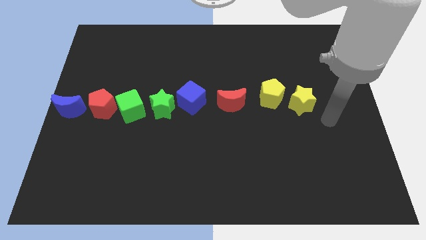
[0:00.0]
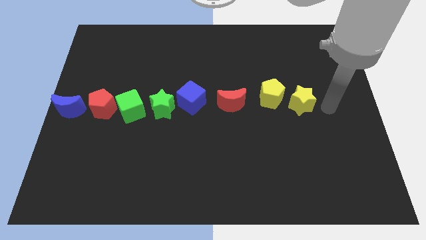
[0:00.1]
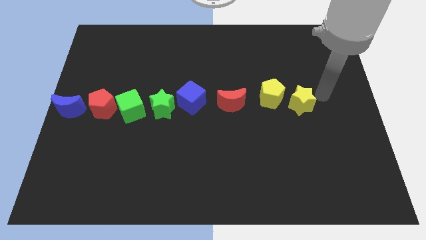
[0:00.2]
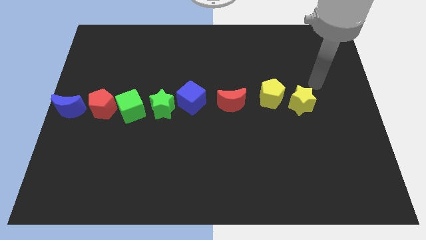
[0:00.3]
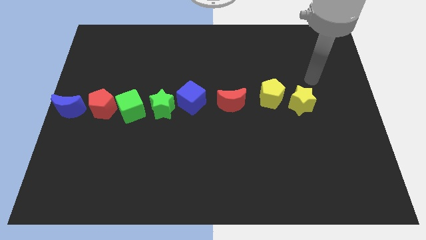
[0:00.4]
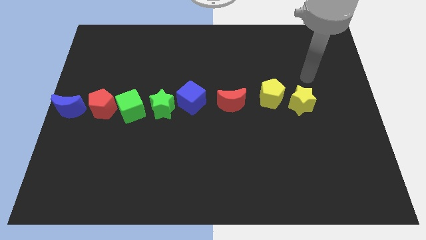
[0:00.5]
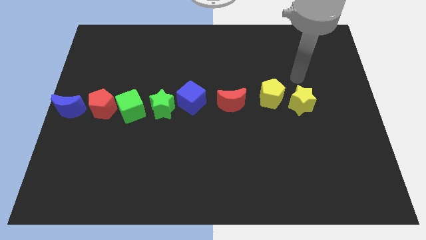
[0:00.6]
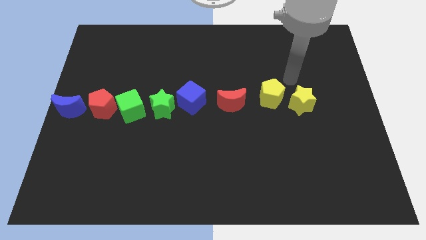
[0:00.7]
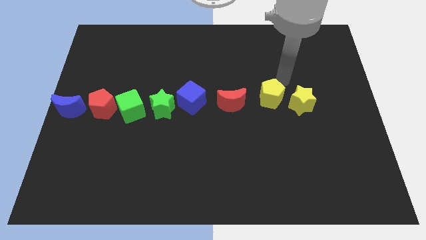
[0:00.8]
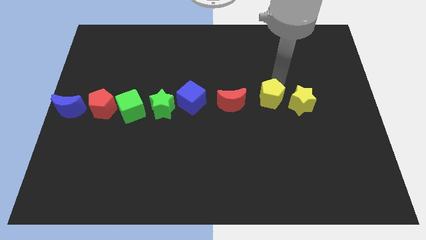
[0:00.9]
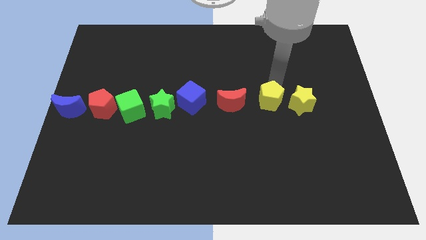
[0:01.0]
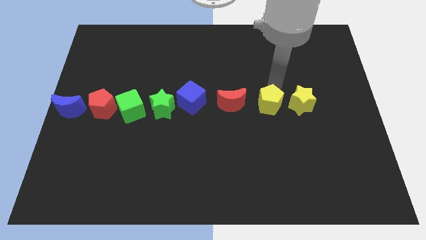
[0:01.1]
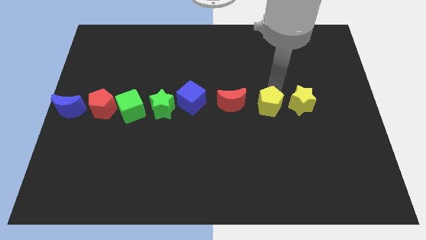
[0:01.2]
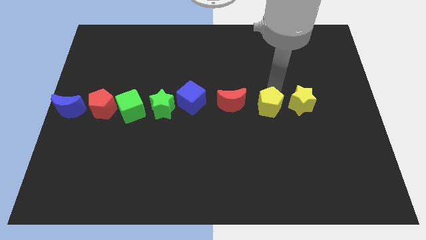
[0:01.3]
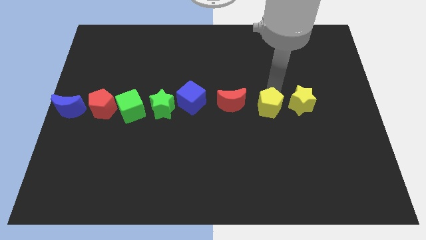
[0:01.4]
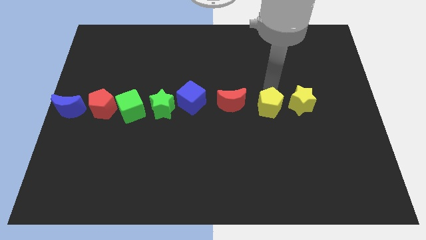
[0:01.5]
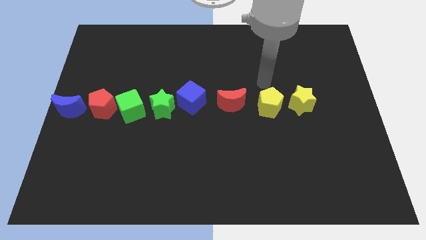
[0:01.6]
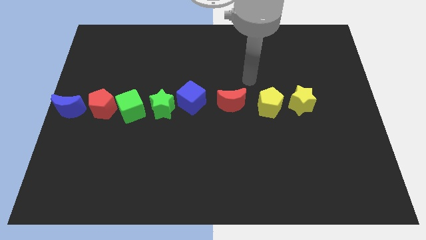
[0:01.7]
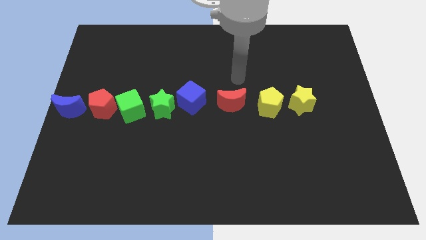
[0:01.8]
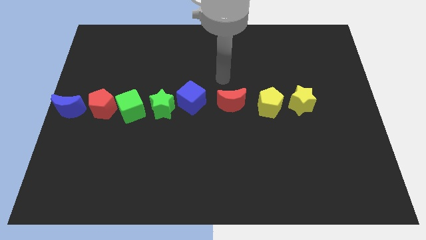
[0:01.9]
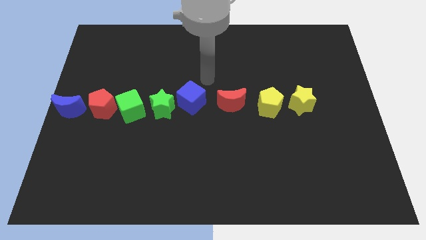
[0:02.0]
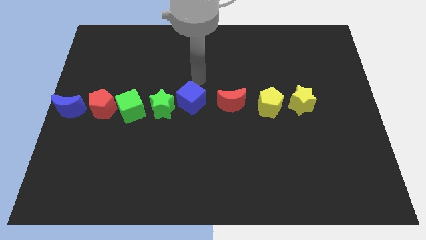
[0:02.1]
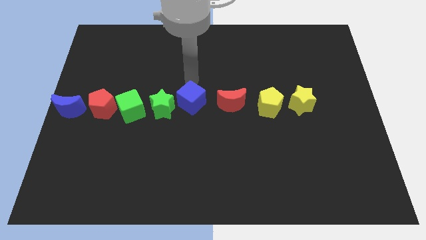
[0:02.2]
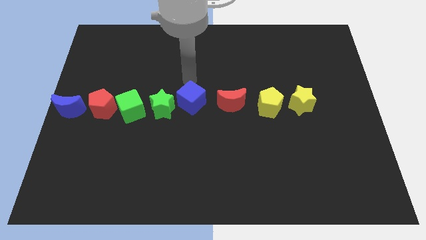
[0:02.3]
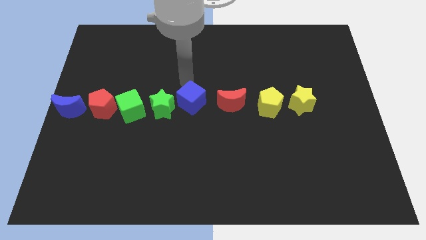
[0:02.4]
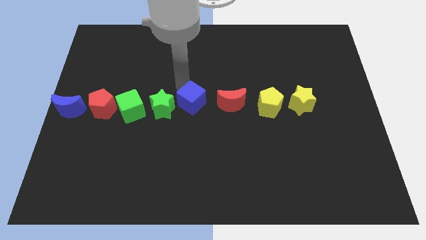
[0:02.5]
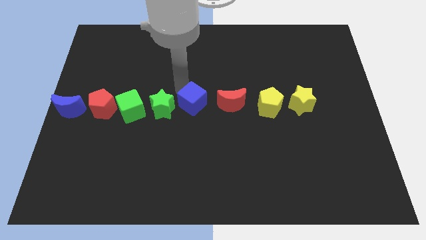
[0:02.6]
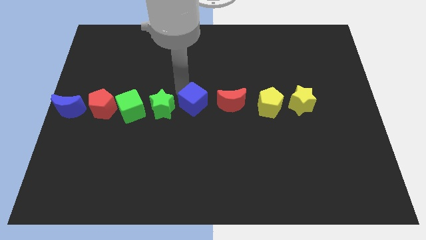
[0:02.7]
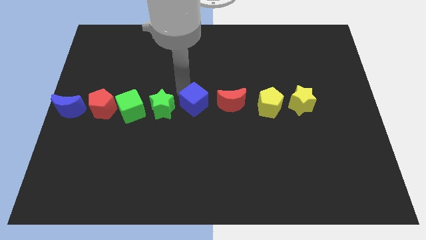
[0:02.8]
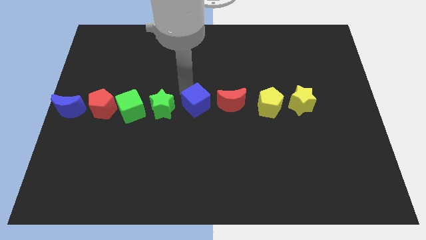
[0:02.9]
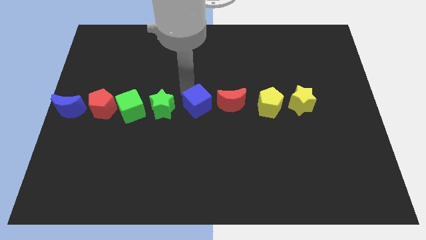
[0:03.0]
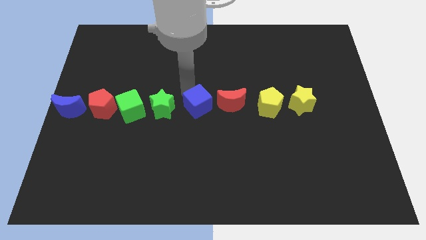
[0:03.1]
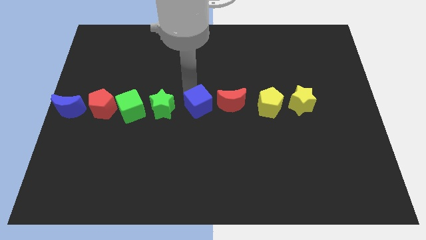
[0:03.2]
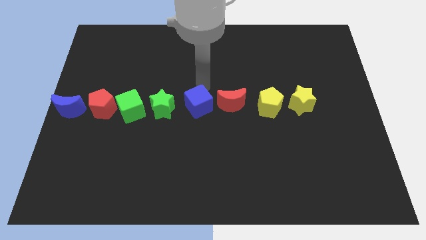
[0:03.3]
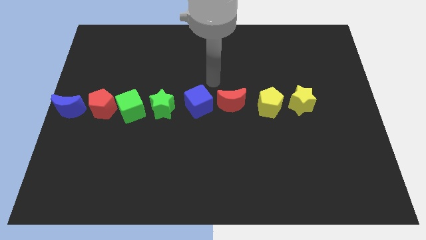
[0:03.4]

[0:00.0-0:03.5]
move the yellow pentagon and the blue cube slightly to bottom

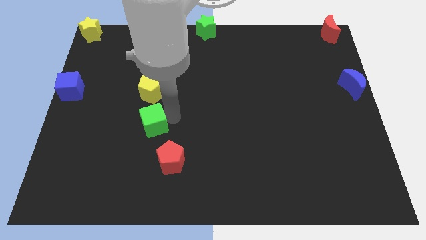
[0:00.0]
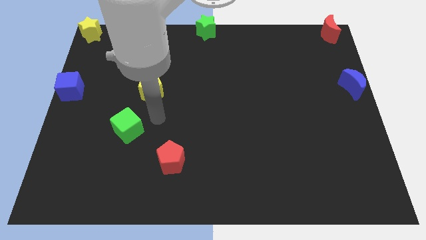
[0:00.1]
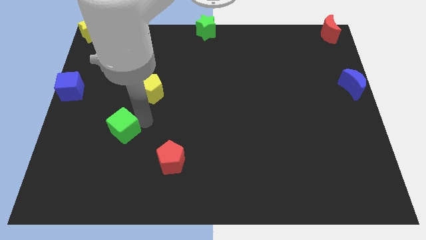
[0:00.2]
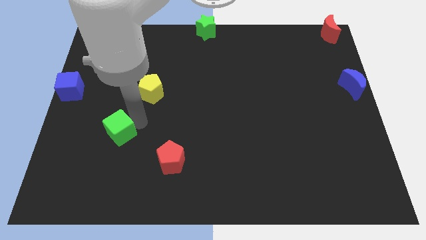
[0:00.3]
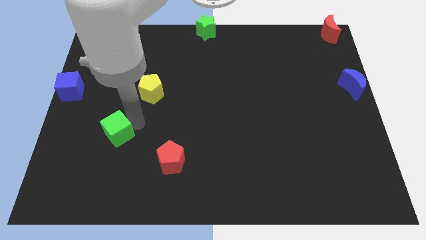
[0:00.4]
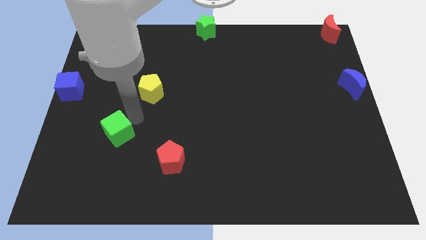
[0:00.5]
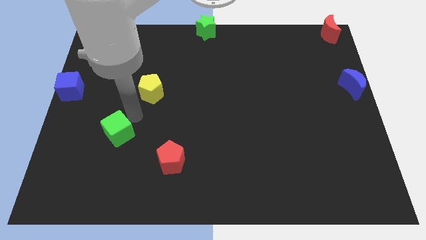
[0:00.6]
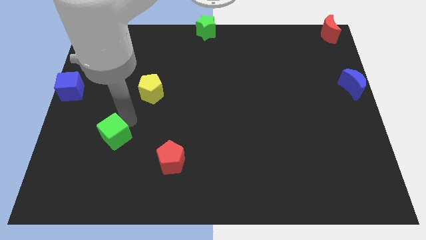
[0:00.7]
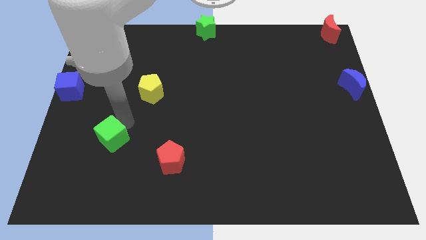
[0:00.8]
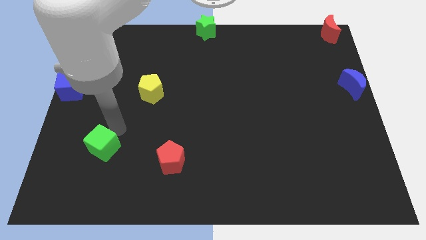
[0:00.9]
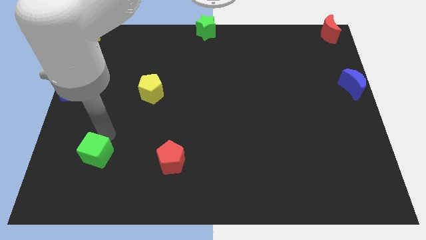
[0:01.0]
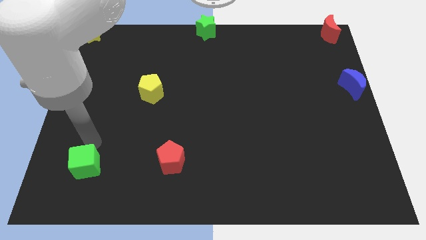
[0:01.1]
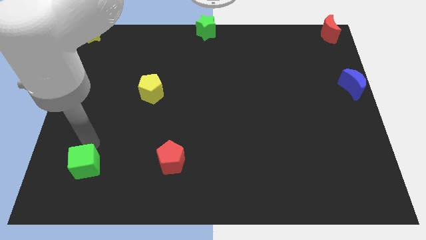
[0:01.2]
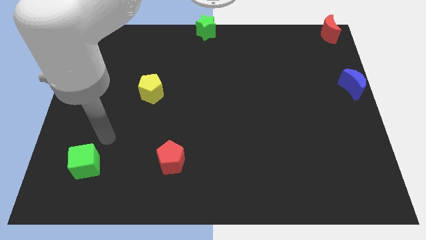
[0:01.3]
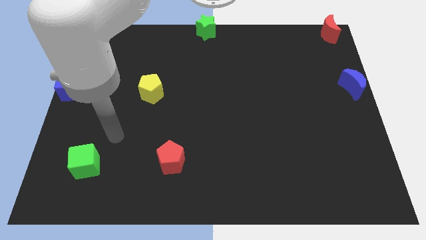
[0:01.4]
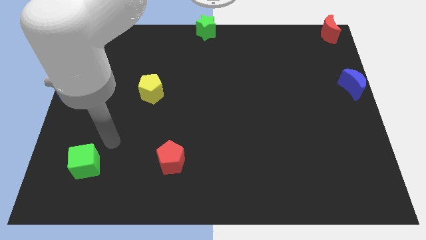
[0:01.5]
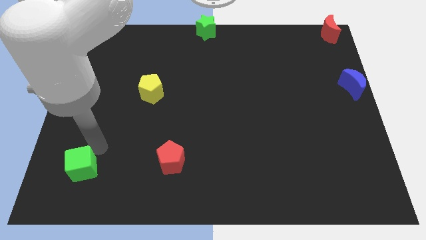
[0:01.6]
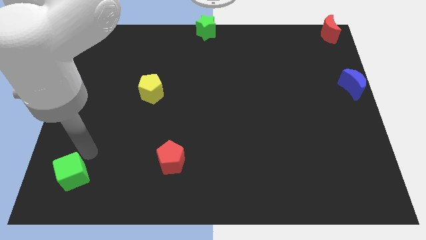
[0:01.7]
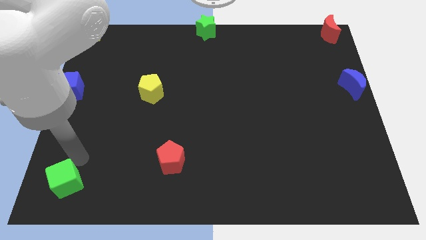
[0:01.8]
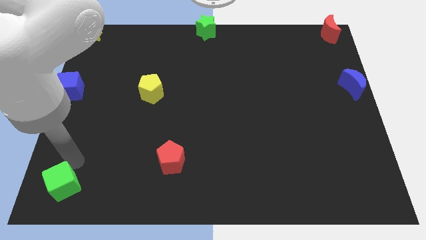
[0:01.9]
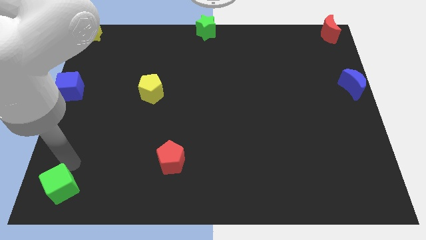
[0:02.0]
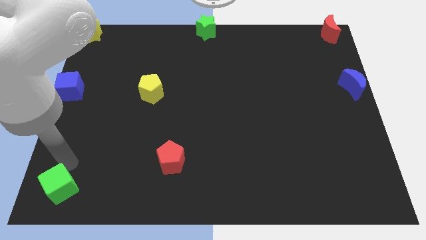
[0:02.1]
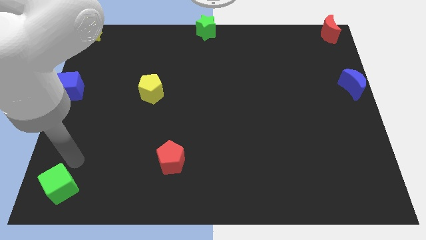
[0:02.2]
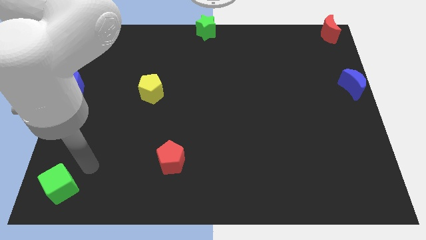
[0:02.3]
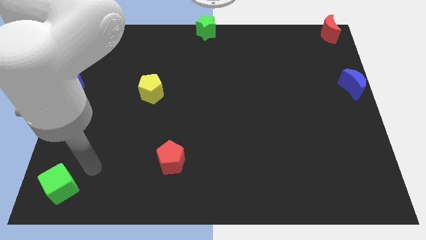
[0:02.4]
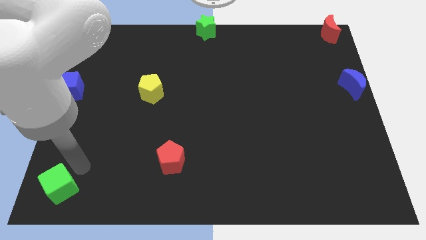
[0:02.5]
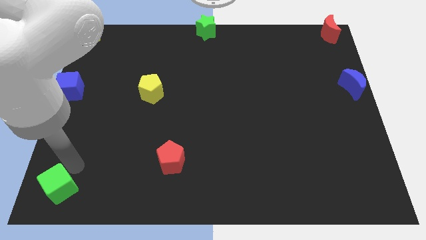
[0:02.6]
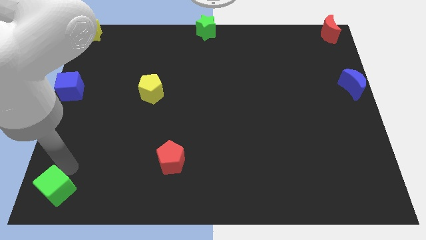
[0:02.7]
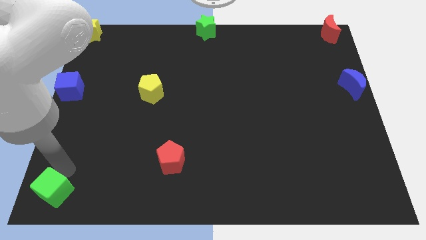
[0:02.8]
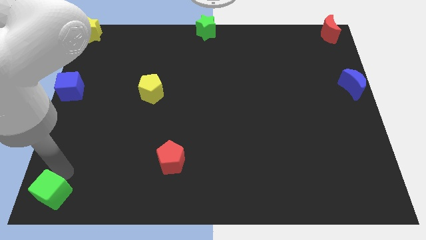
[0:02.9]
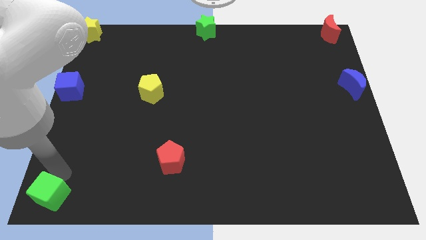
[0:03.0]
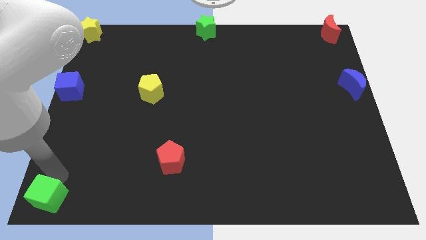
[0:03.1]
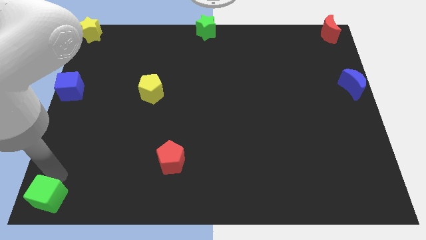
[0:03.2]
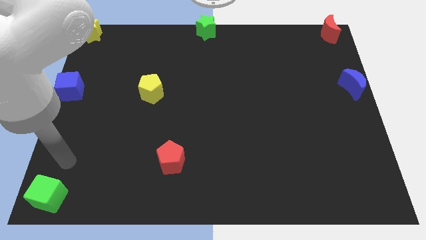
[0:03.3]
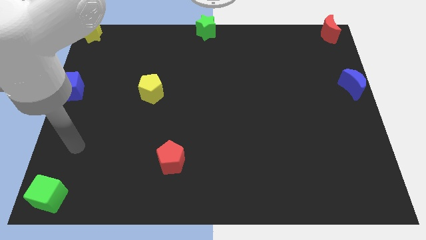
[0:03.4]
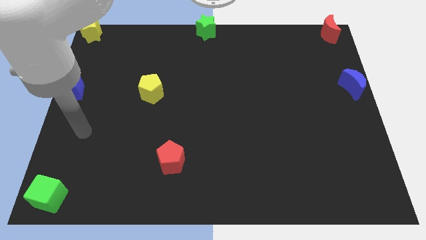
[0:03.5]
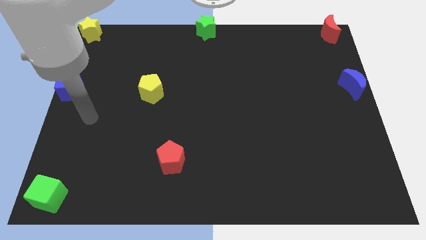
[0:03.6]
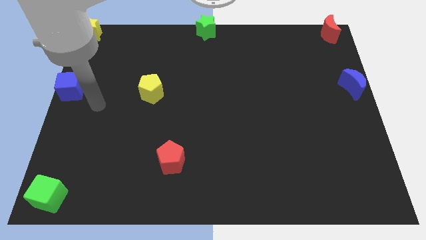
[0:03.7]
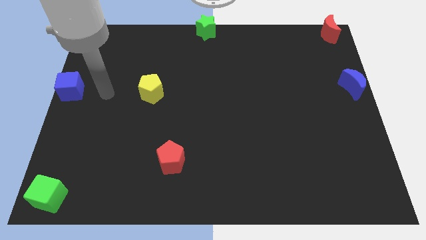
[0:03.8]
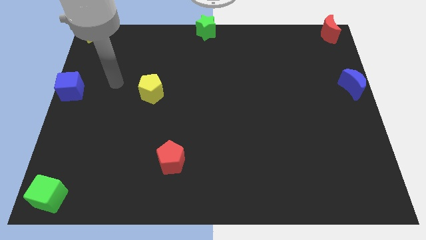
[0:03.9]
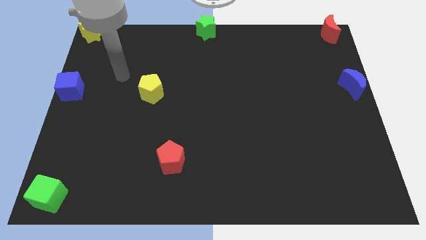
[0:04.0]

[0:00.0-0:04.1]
push green cube to the bottom left corner

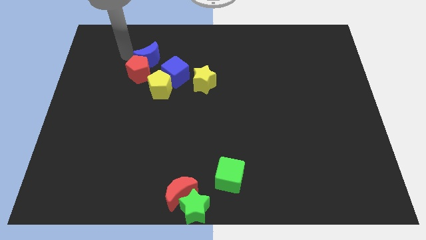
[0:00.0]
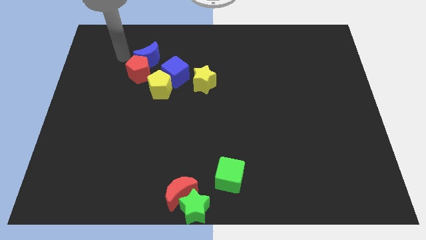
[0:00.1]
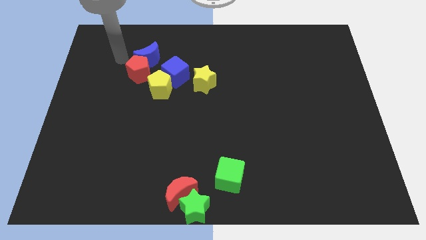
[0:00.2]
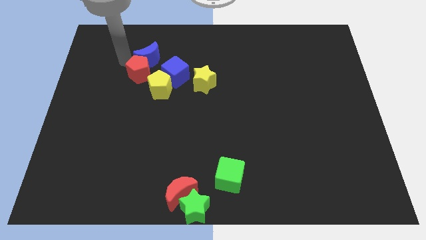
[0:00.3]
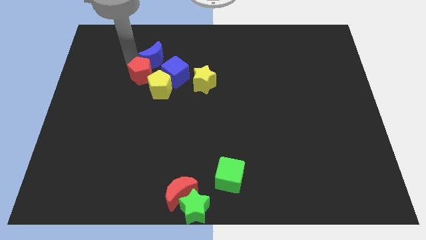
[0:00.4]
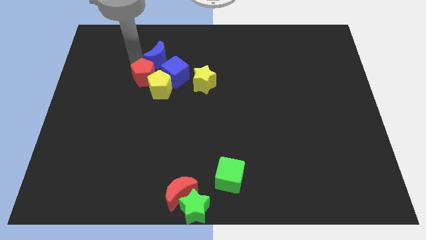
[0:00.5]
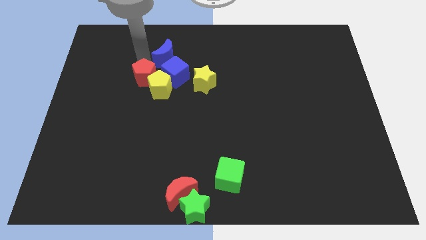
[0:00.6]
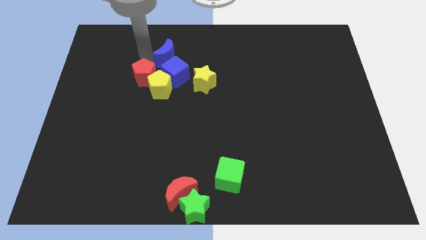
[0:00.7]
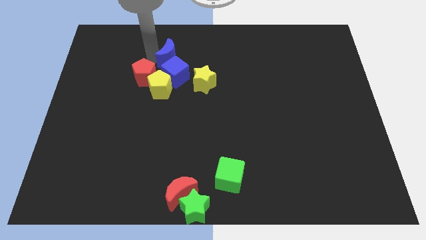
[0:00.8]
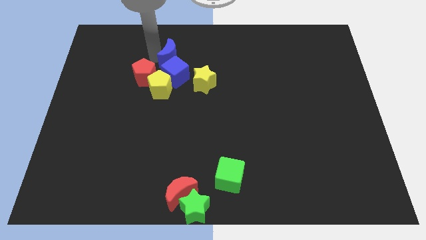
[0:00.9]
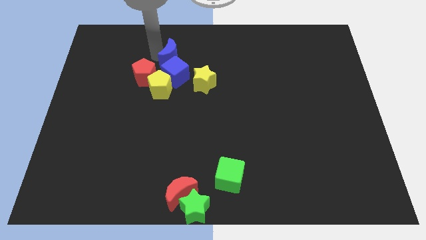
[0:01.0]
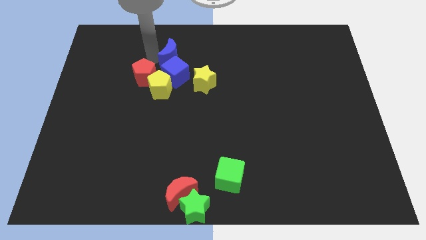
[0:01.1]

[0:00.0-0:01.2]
place the blue crescent above the blue cube

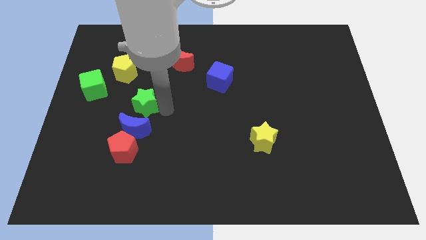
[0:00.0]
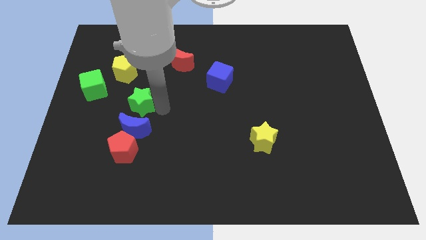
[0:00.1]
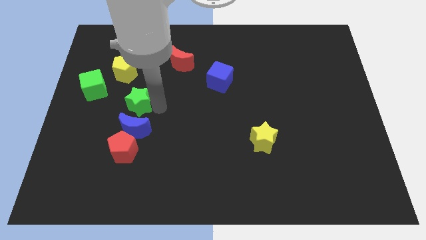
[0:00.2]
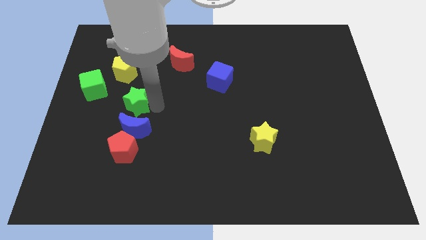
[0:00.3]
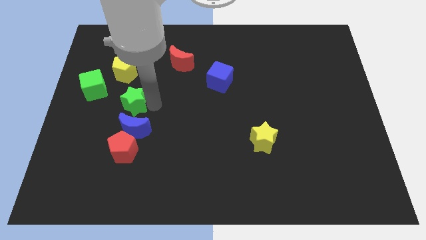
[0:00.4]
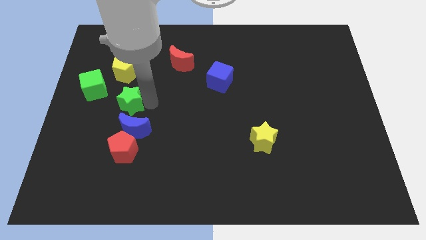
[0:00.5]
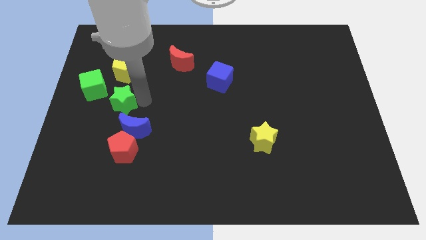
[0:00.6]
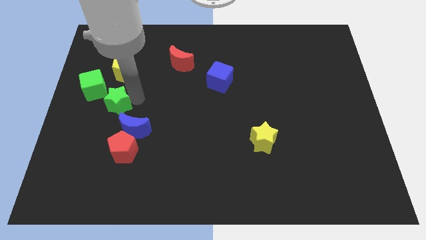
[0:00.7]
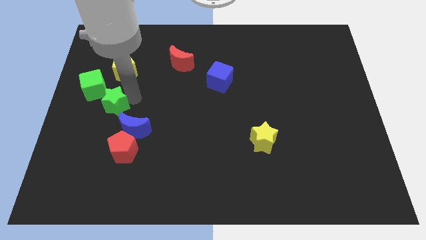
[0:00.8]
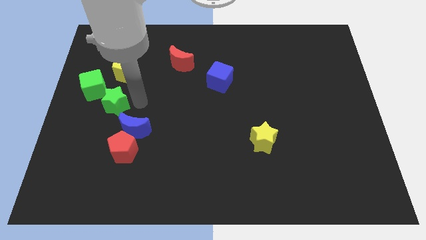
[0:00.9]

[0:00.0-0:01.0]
place the green star in between the blue moon and green cube
